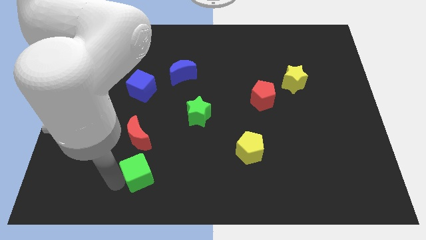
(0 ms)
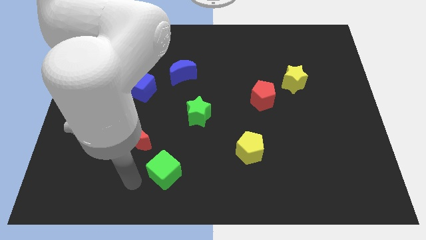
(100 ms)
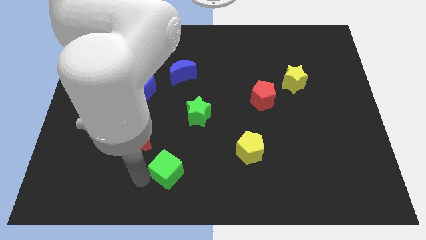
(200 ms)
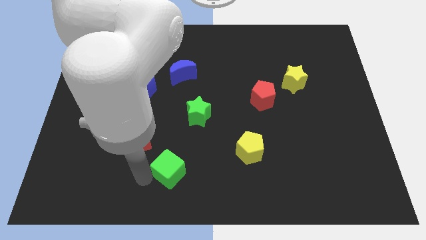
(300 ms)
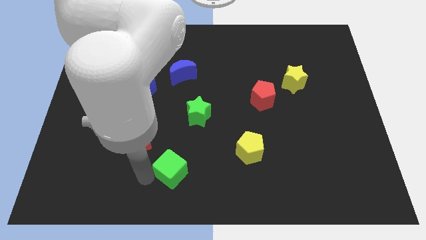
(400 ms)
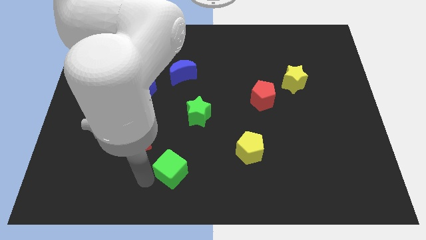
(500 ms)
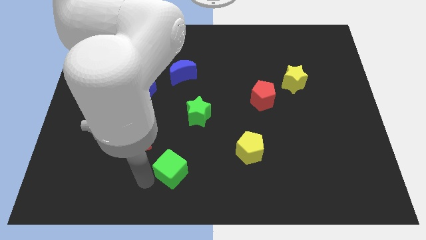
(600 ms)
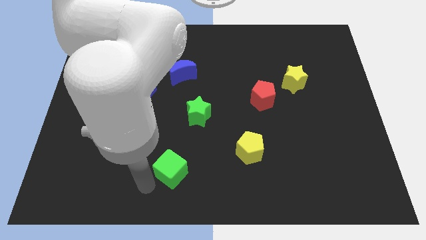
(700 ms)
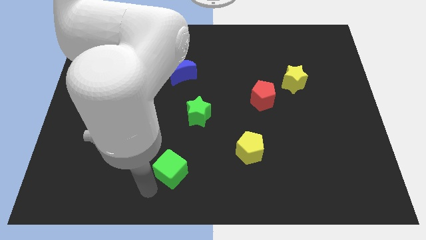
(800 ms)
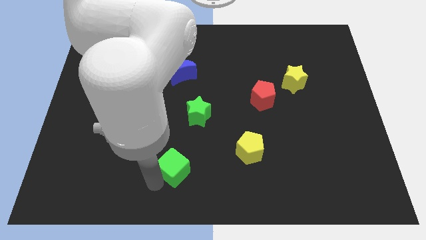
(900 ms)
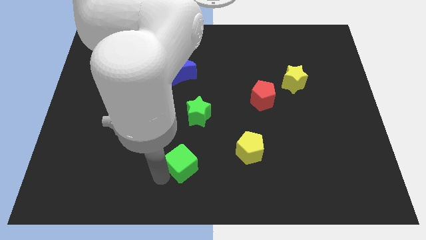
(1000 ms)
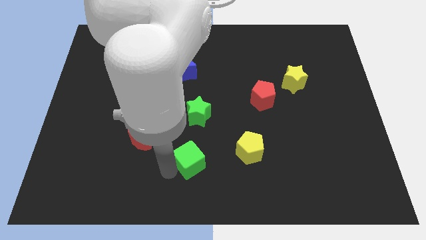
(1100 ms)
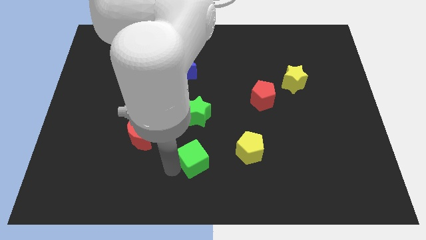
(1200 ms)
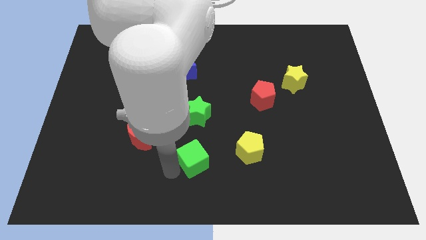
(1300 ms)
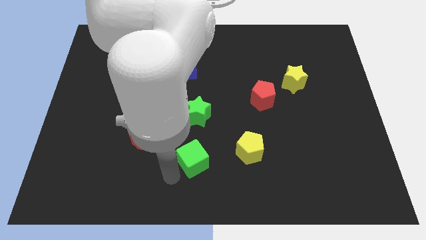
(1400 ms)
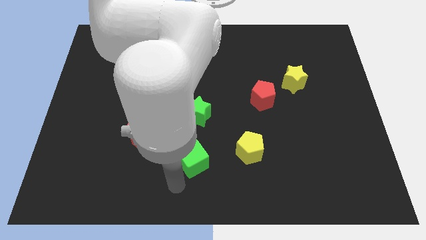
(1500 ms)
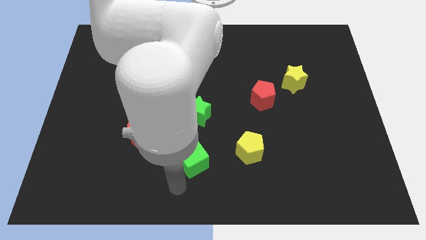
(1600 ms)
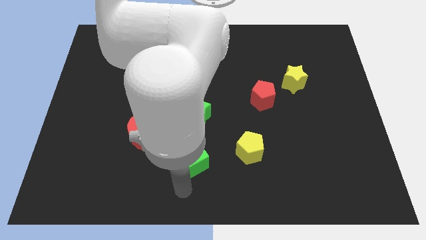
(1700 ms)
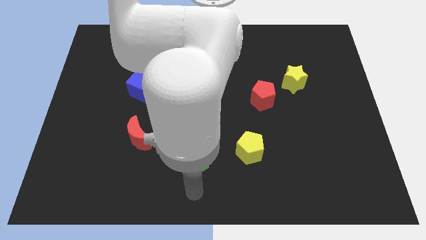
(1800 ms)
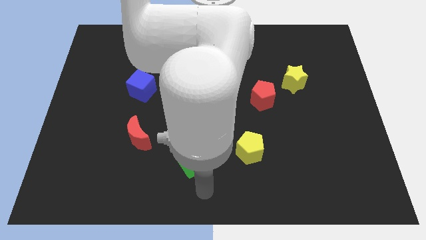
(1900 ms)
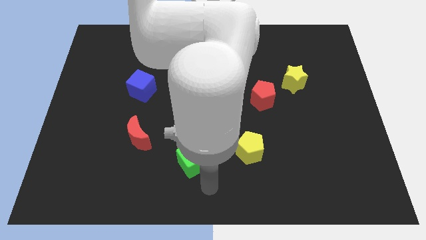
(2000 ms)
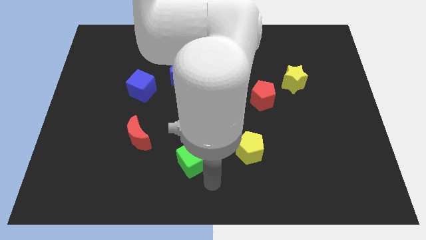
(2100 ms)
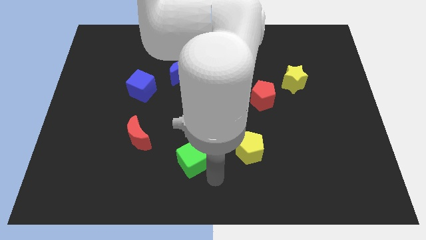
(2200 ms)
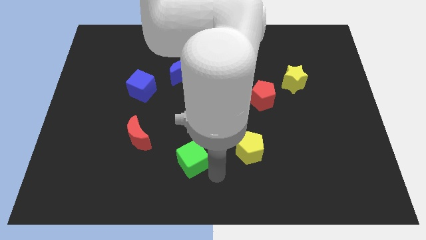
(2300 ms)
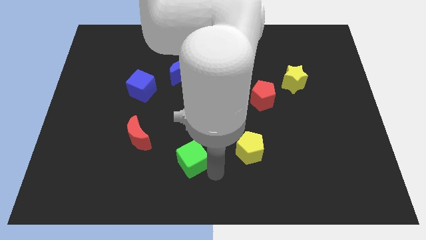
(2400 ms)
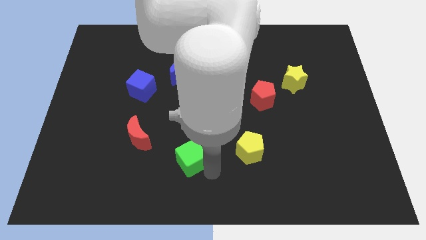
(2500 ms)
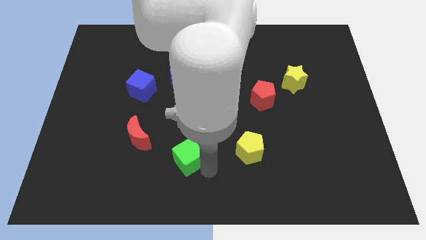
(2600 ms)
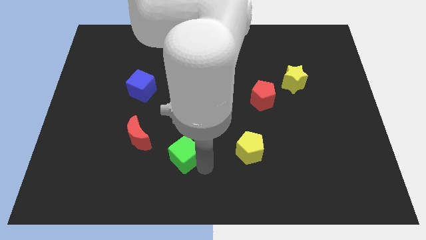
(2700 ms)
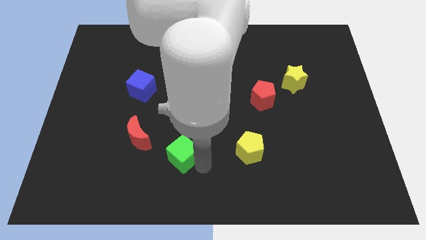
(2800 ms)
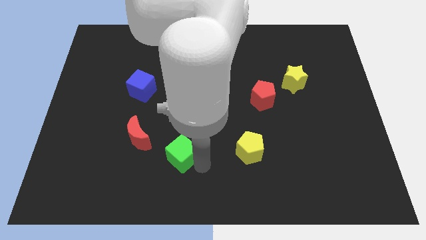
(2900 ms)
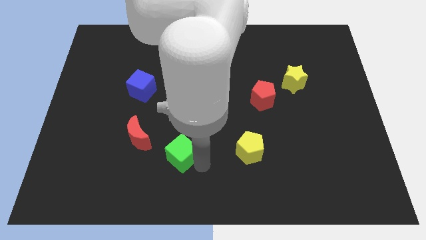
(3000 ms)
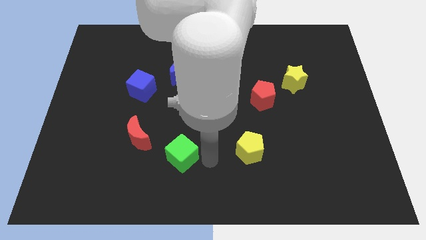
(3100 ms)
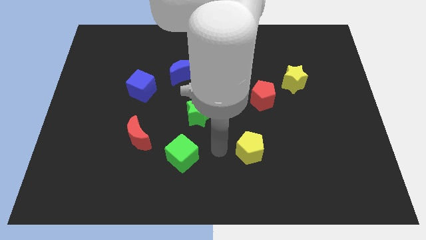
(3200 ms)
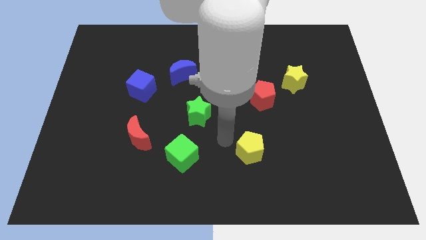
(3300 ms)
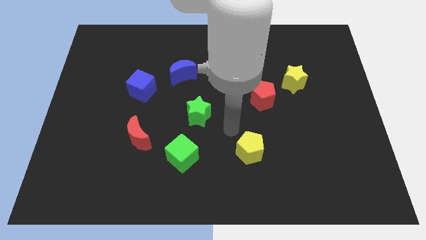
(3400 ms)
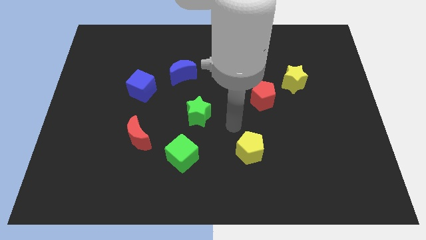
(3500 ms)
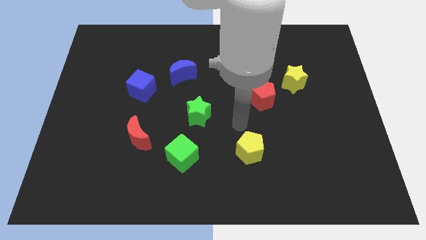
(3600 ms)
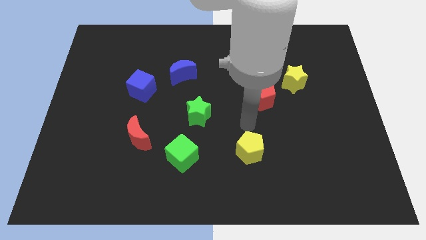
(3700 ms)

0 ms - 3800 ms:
move green cube to the left of yellow pentagon

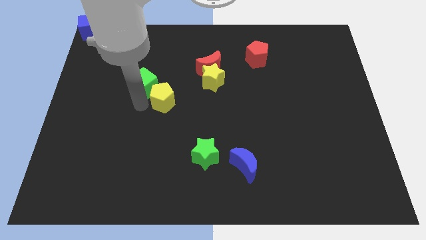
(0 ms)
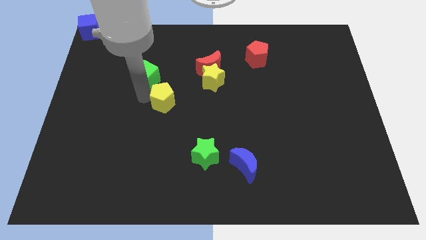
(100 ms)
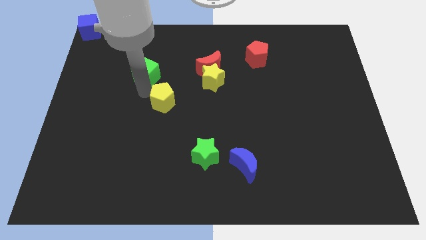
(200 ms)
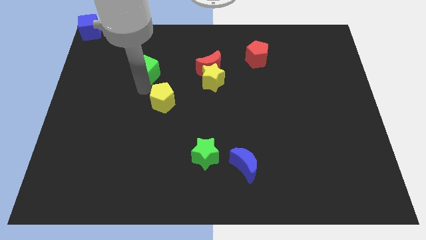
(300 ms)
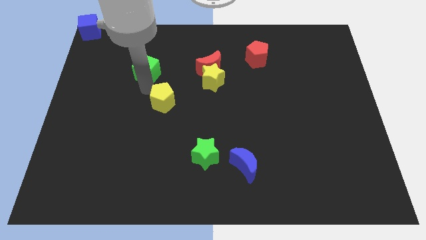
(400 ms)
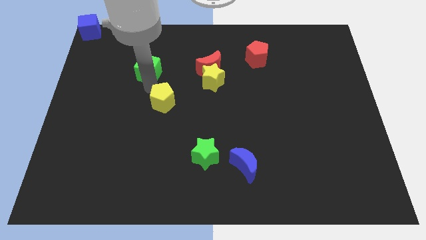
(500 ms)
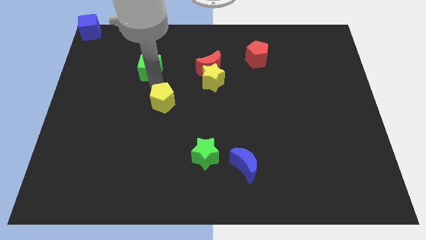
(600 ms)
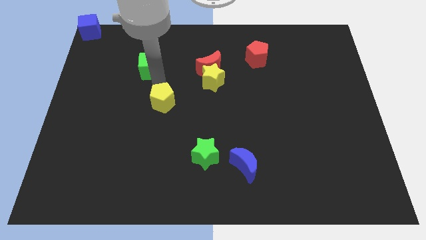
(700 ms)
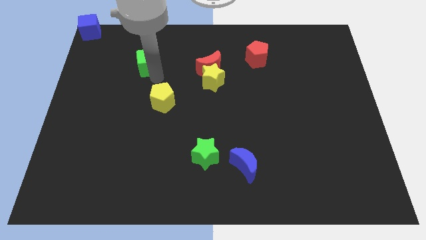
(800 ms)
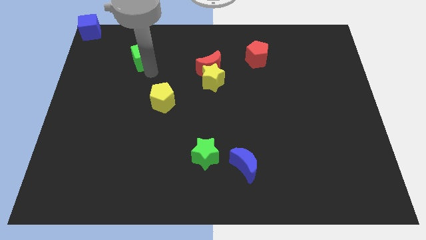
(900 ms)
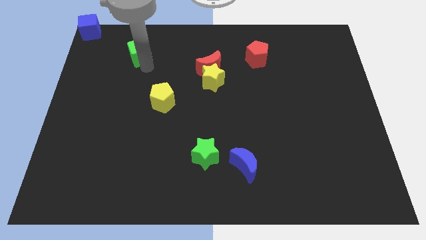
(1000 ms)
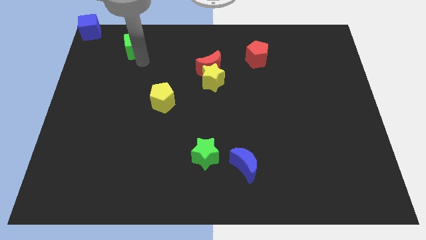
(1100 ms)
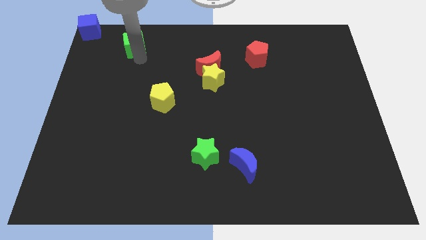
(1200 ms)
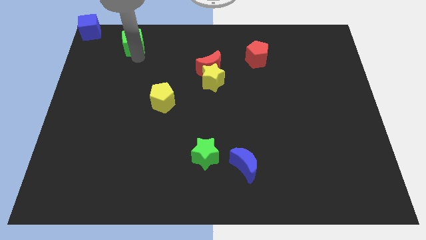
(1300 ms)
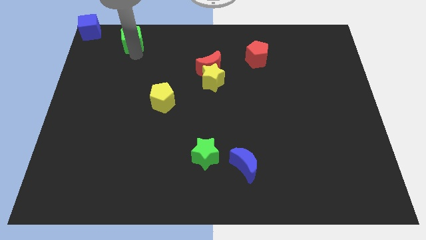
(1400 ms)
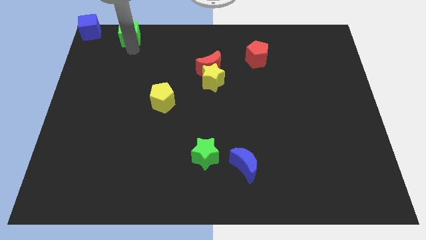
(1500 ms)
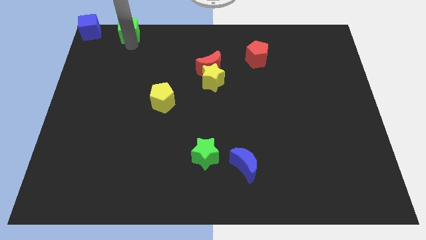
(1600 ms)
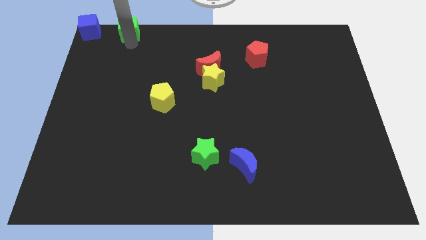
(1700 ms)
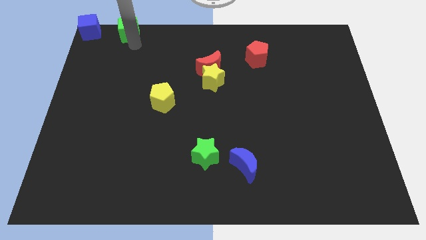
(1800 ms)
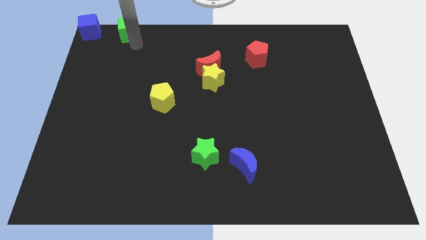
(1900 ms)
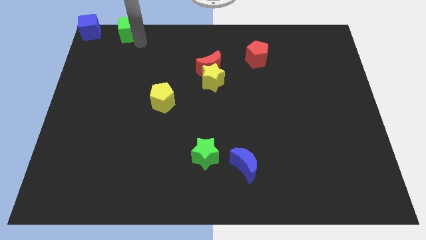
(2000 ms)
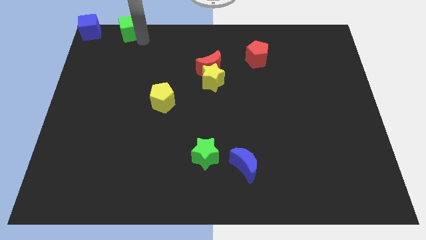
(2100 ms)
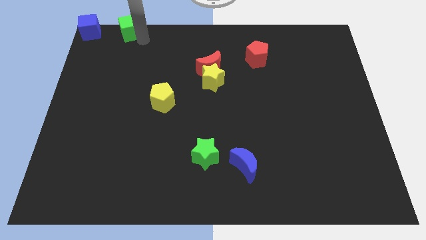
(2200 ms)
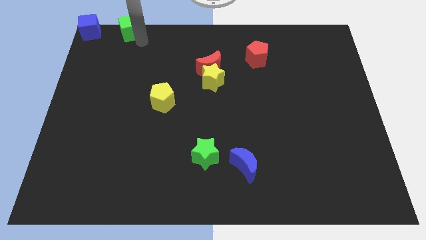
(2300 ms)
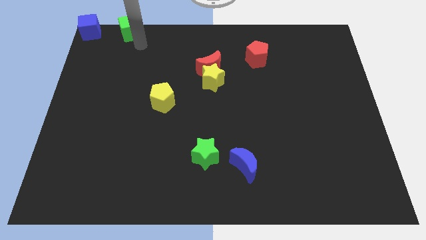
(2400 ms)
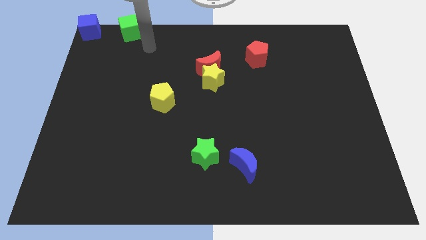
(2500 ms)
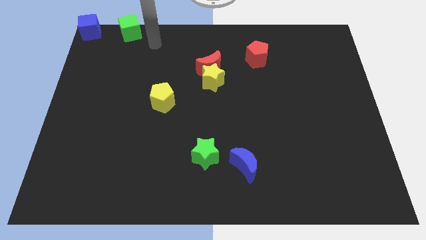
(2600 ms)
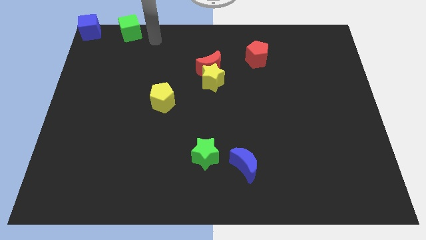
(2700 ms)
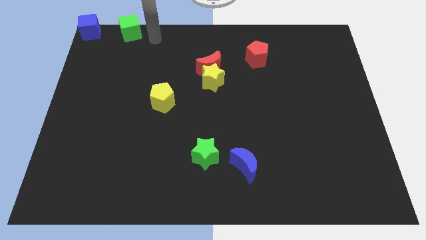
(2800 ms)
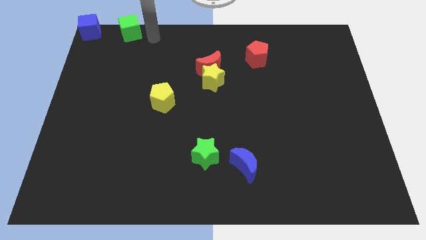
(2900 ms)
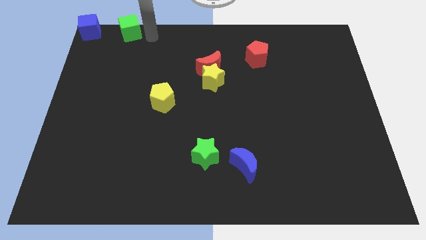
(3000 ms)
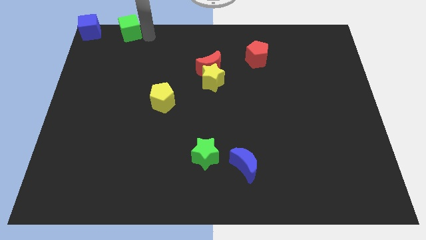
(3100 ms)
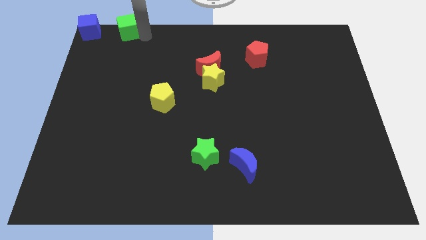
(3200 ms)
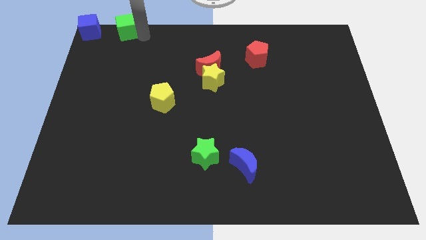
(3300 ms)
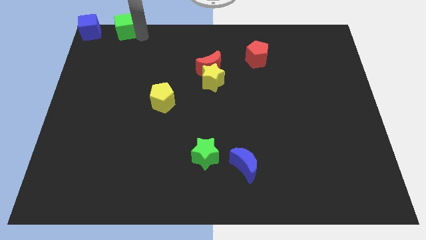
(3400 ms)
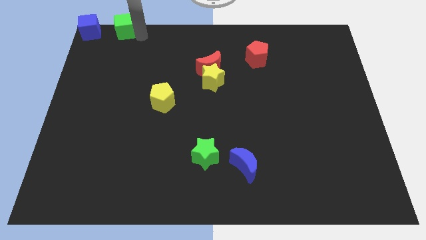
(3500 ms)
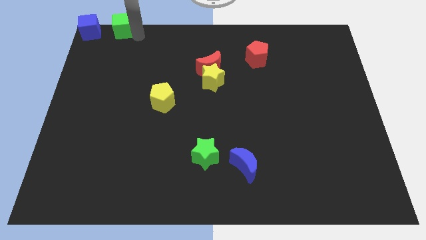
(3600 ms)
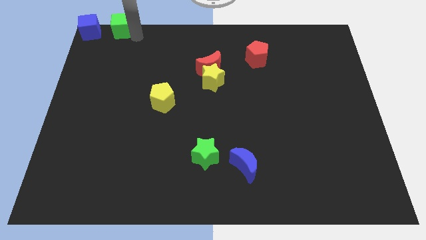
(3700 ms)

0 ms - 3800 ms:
place the green cube to the right of the blue cube

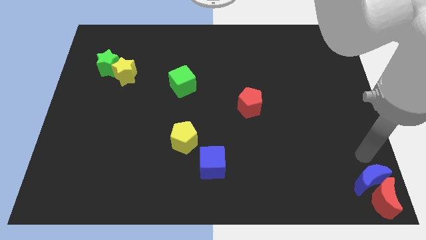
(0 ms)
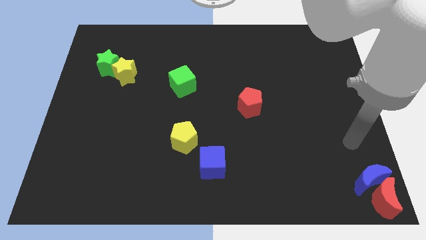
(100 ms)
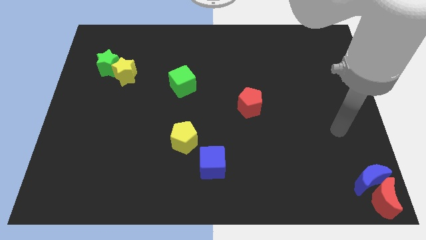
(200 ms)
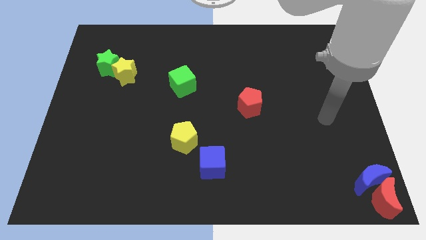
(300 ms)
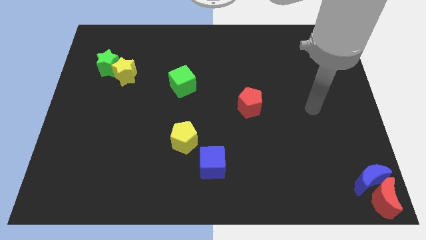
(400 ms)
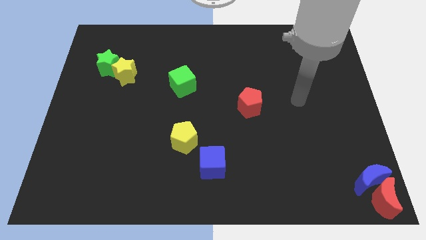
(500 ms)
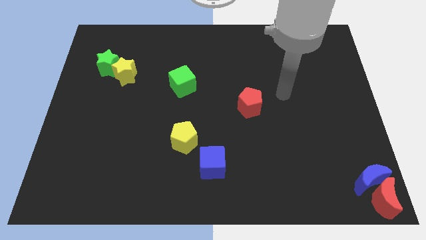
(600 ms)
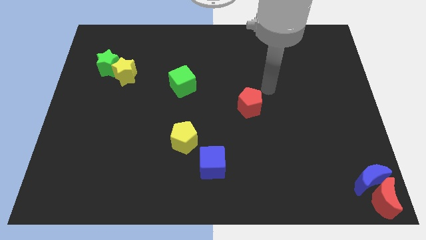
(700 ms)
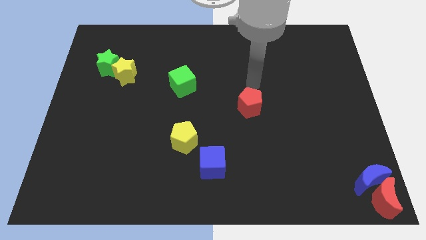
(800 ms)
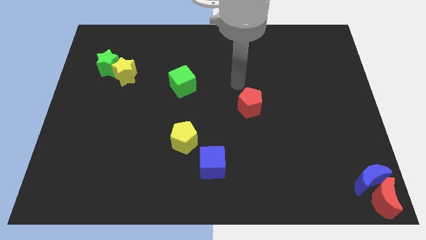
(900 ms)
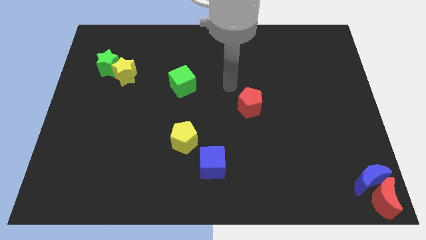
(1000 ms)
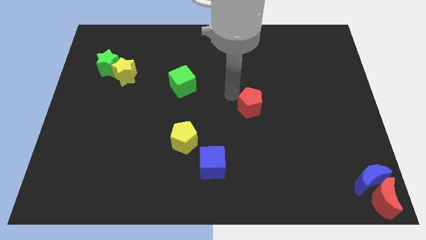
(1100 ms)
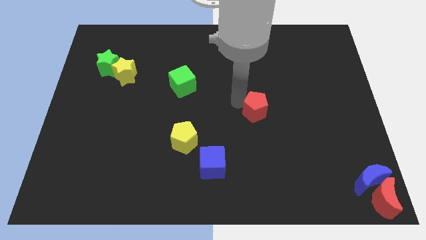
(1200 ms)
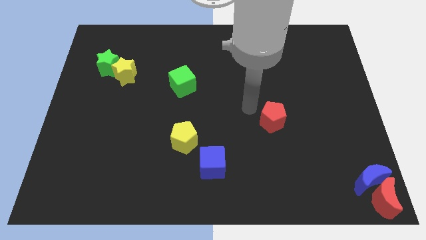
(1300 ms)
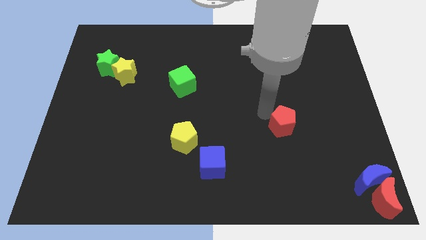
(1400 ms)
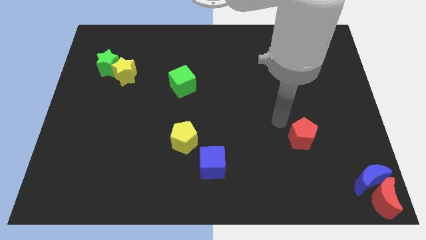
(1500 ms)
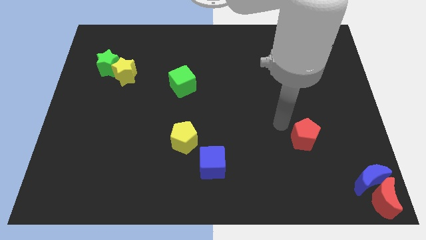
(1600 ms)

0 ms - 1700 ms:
move the red pentagon horizontally to the right side of the yellow pentagon
